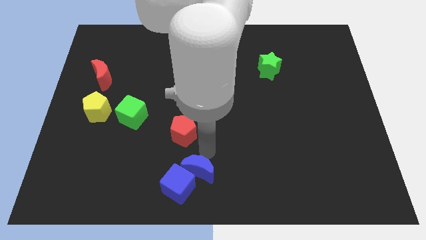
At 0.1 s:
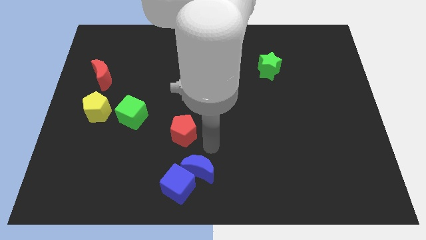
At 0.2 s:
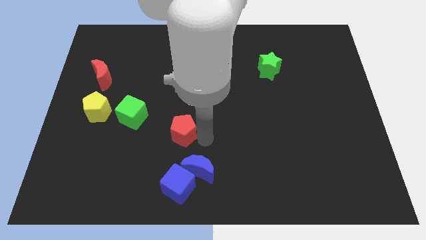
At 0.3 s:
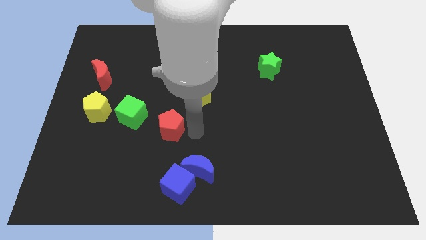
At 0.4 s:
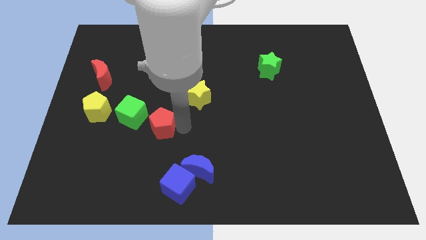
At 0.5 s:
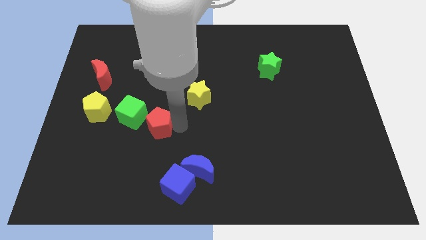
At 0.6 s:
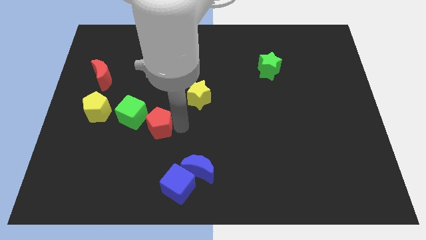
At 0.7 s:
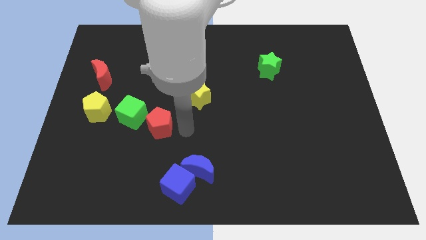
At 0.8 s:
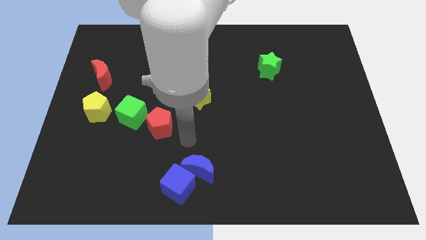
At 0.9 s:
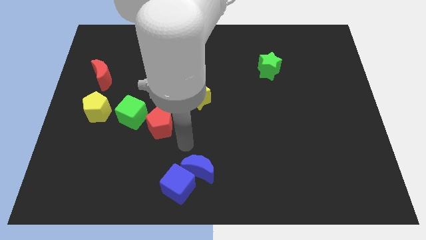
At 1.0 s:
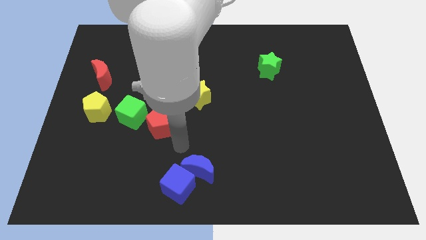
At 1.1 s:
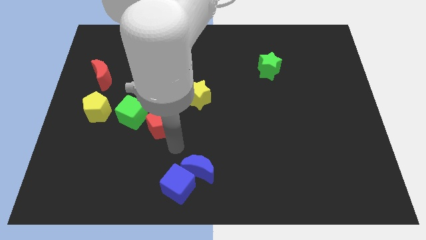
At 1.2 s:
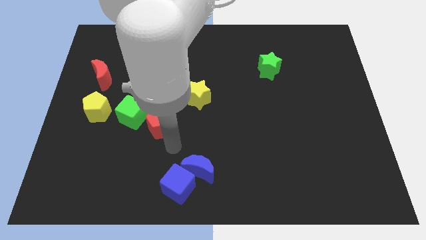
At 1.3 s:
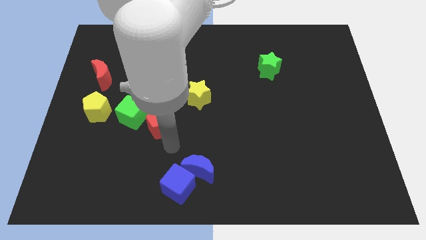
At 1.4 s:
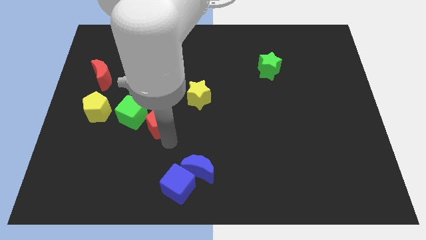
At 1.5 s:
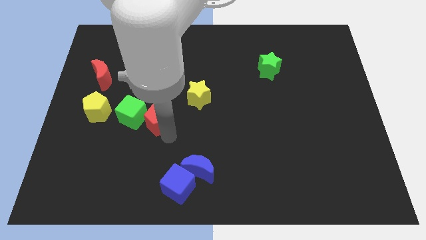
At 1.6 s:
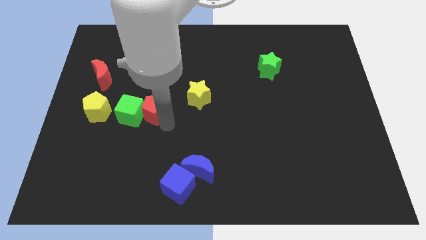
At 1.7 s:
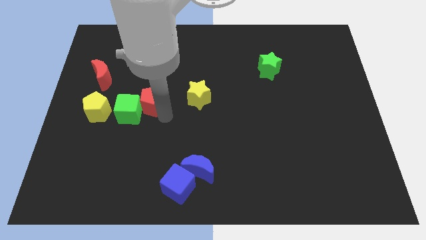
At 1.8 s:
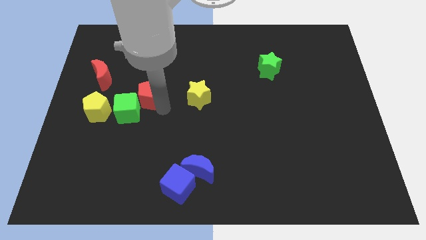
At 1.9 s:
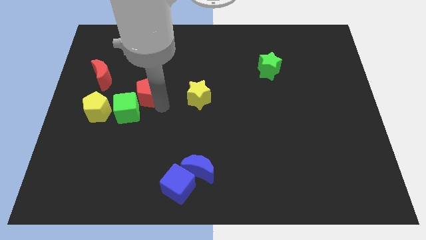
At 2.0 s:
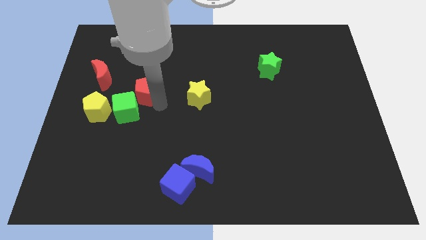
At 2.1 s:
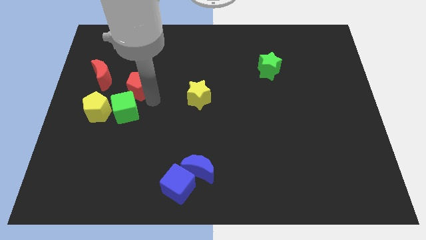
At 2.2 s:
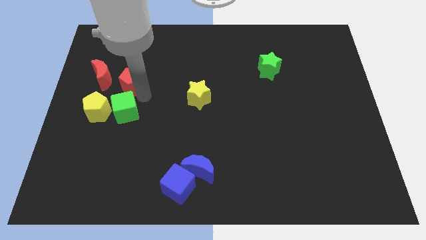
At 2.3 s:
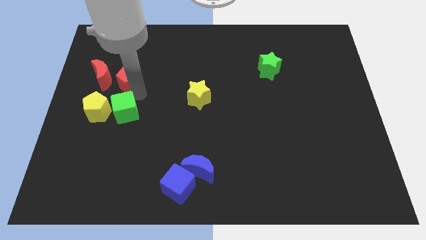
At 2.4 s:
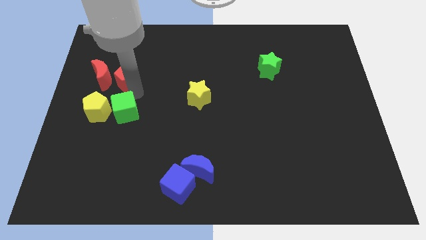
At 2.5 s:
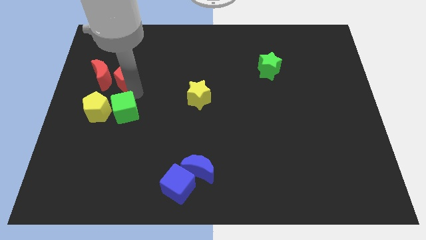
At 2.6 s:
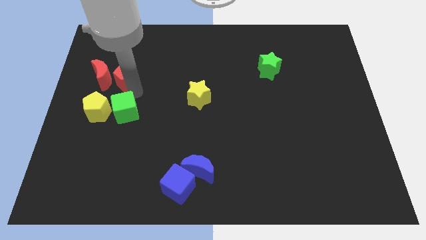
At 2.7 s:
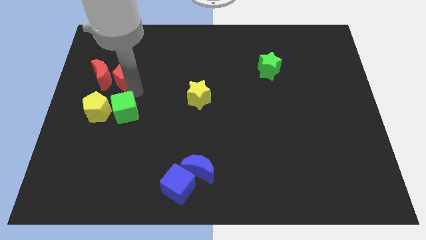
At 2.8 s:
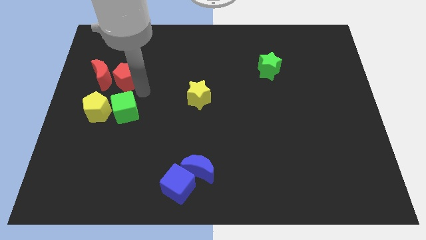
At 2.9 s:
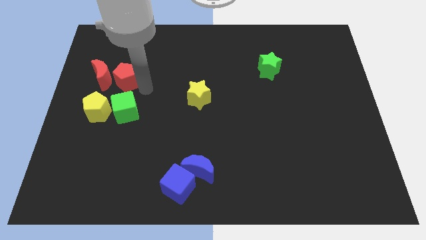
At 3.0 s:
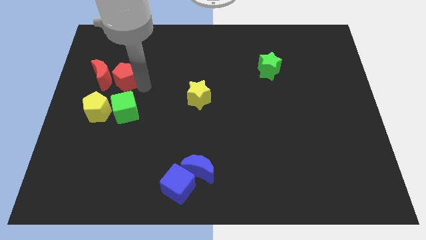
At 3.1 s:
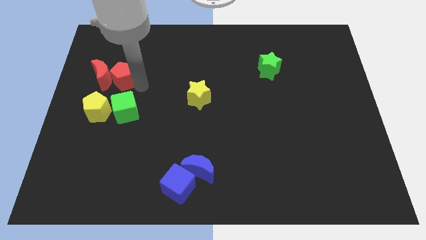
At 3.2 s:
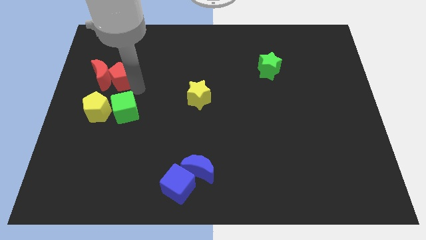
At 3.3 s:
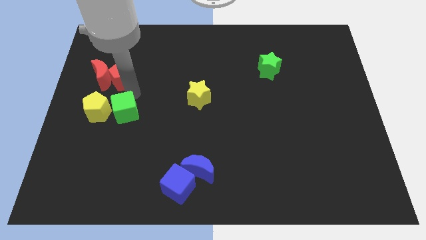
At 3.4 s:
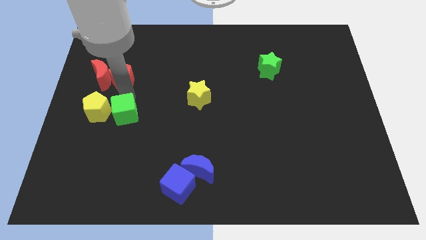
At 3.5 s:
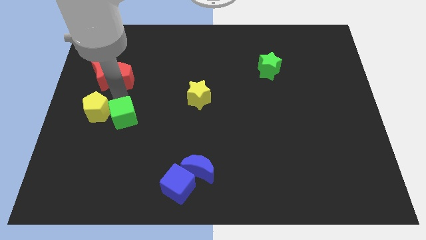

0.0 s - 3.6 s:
push the red pentagon into the red crescent

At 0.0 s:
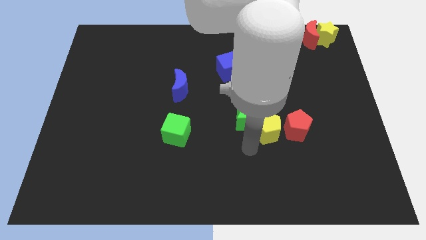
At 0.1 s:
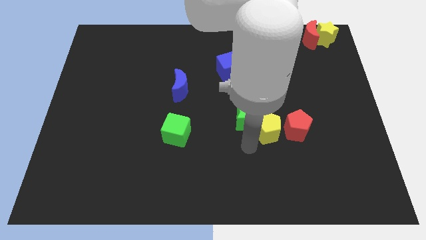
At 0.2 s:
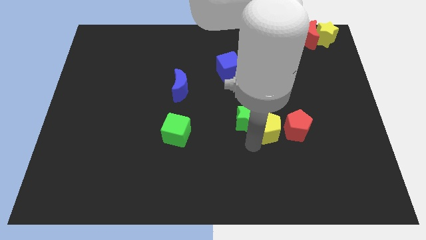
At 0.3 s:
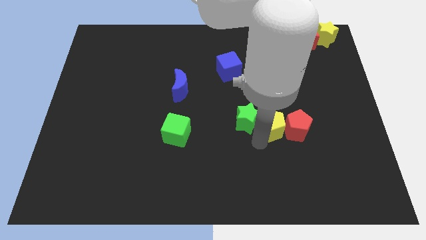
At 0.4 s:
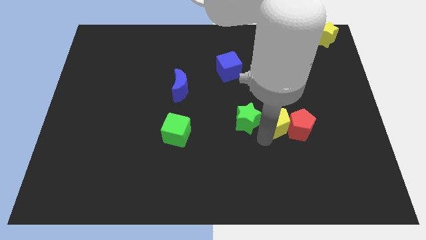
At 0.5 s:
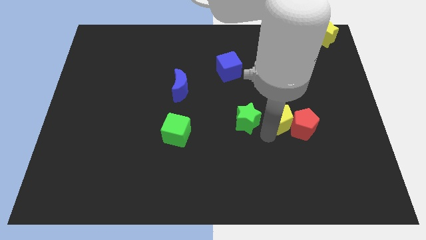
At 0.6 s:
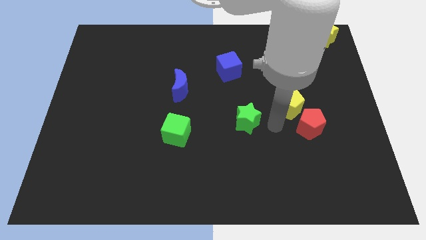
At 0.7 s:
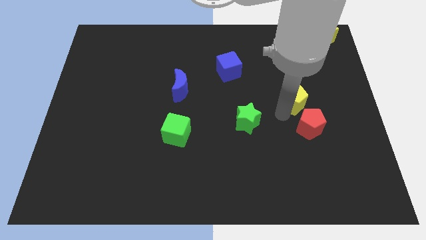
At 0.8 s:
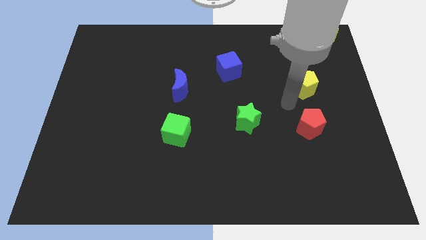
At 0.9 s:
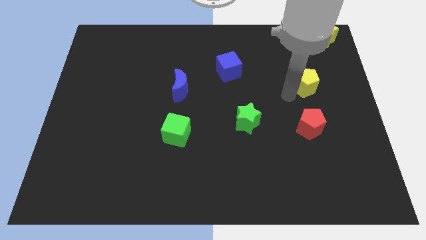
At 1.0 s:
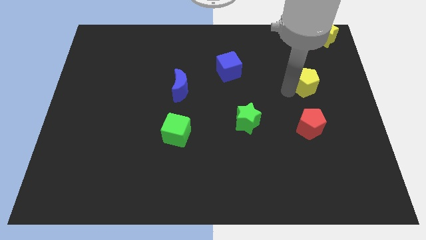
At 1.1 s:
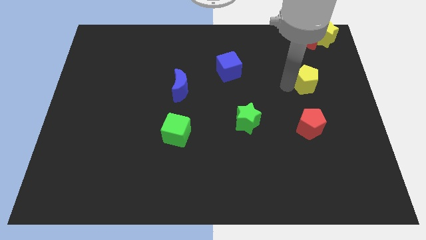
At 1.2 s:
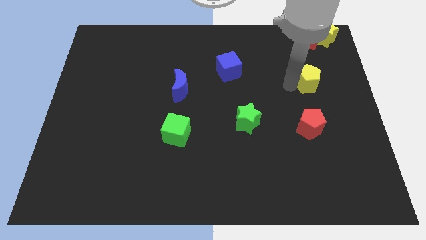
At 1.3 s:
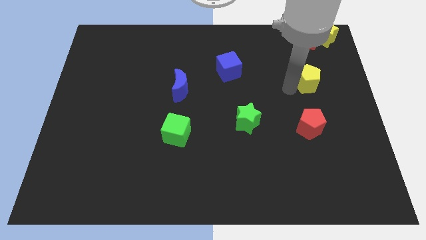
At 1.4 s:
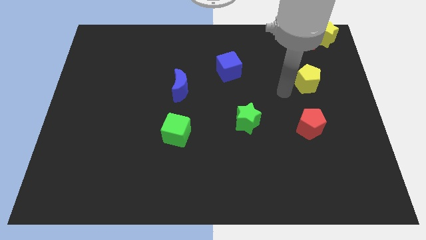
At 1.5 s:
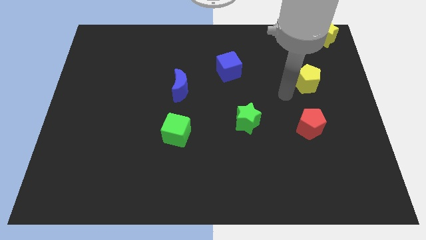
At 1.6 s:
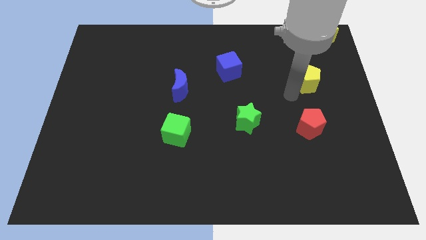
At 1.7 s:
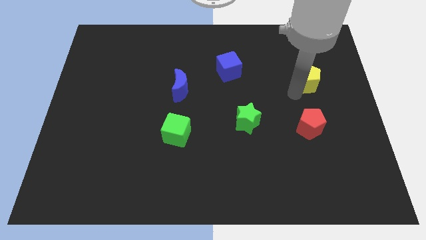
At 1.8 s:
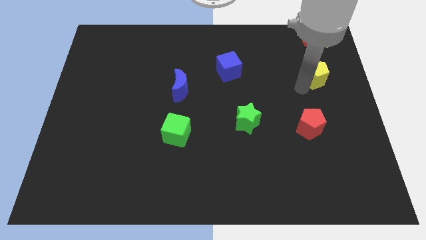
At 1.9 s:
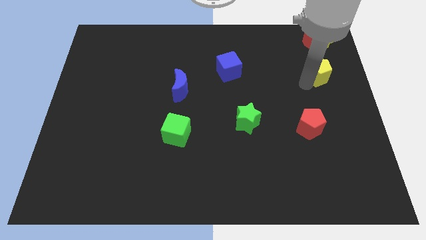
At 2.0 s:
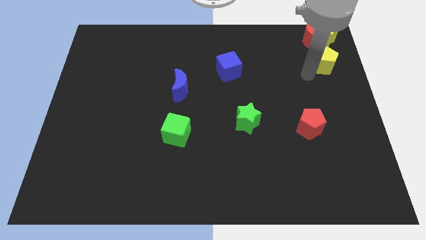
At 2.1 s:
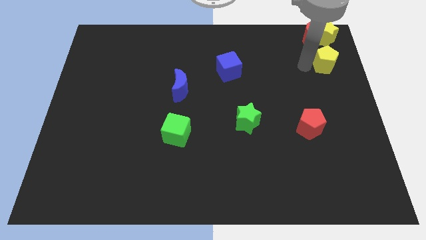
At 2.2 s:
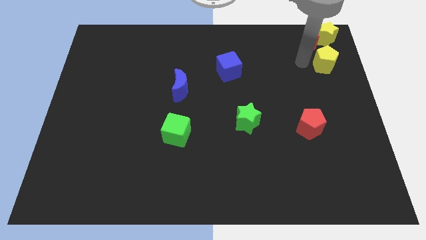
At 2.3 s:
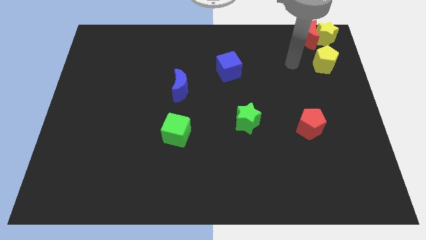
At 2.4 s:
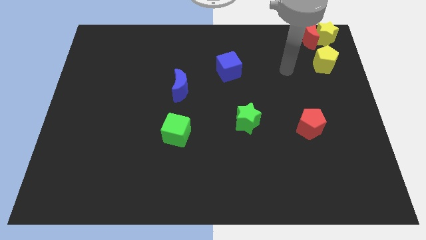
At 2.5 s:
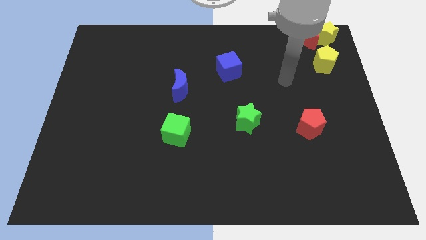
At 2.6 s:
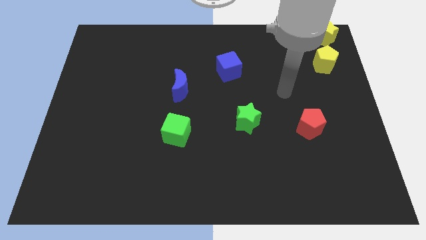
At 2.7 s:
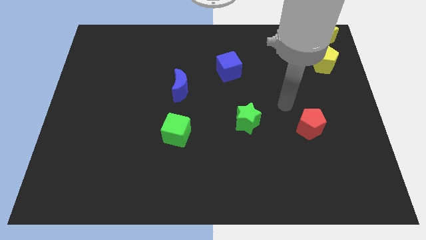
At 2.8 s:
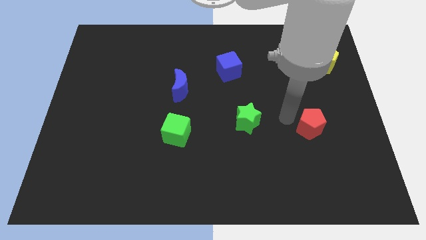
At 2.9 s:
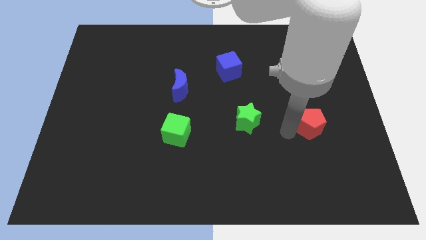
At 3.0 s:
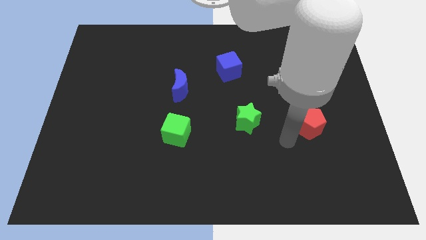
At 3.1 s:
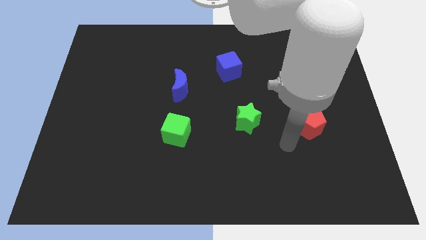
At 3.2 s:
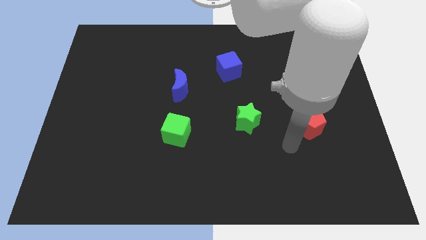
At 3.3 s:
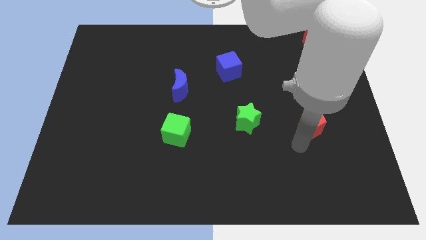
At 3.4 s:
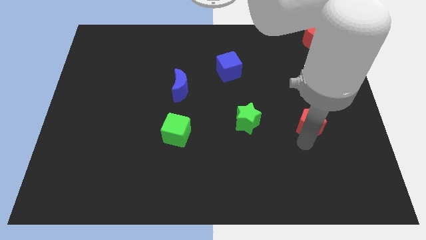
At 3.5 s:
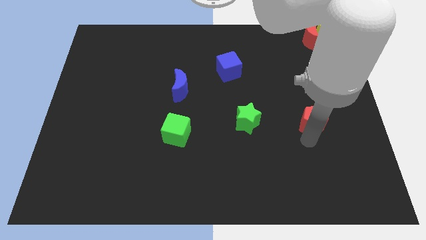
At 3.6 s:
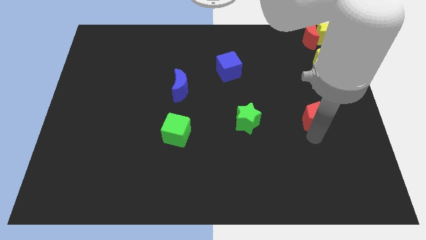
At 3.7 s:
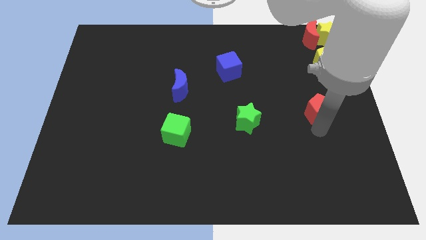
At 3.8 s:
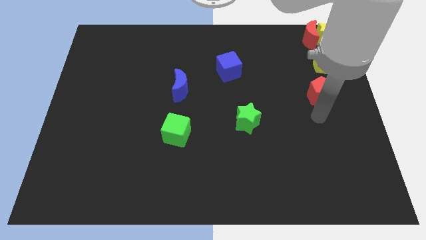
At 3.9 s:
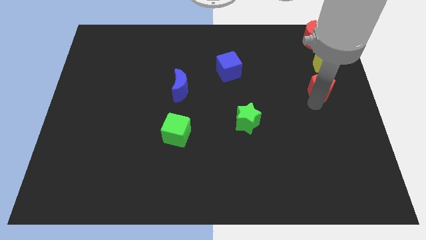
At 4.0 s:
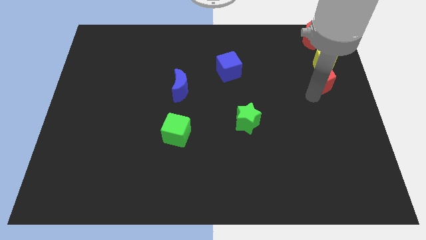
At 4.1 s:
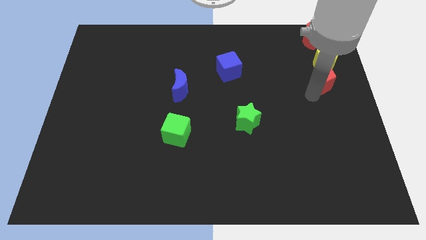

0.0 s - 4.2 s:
move the yellow pentagon and red pentagon diagonally on the bottom left side of the yellow star

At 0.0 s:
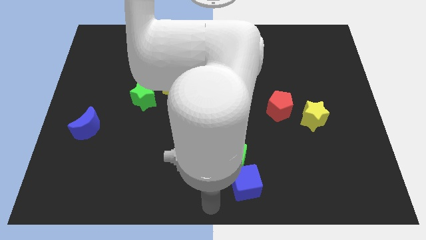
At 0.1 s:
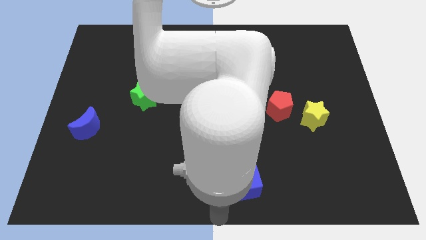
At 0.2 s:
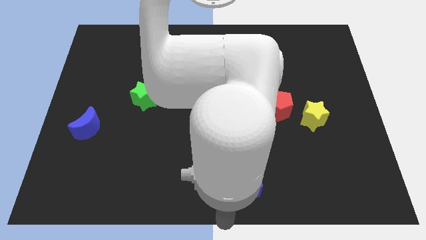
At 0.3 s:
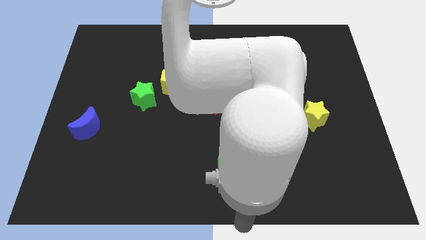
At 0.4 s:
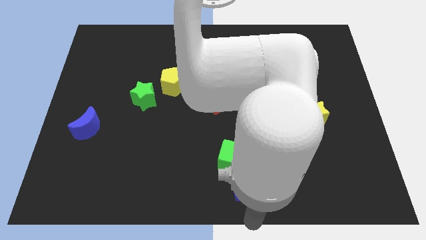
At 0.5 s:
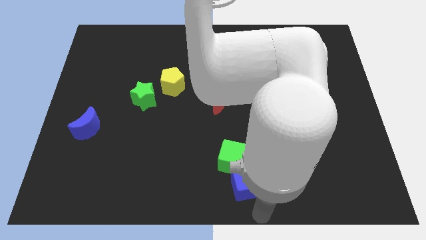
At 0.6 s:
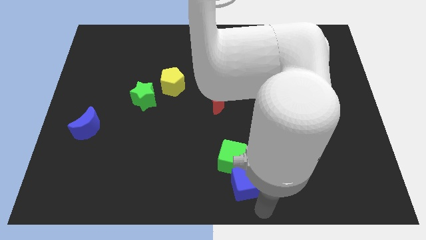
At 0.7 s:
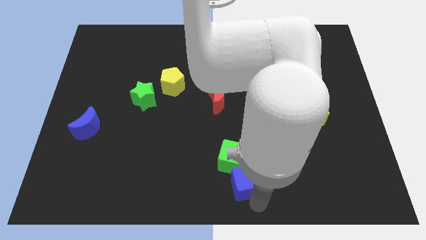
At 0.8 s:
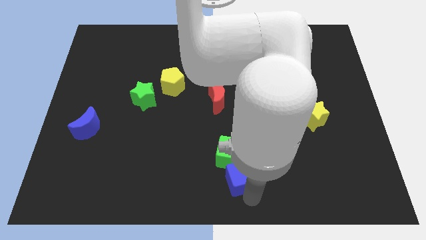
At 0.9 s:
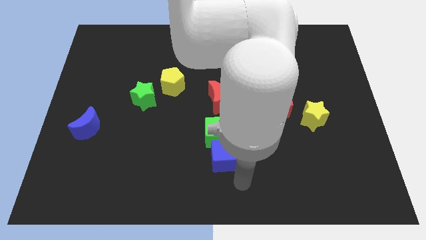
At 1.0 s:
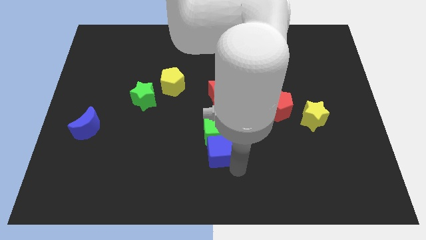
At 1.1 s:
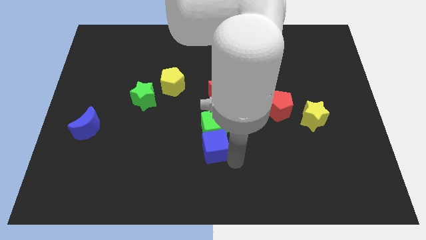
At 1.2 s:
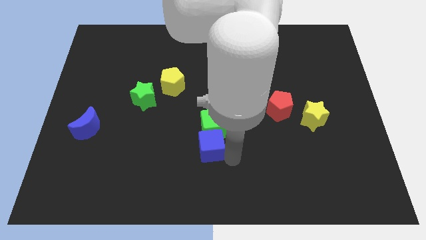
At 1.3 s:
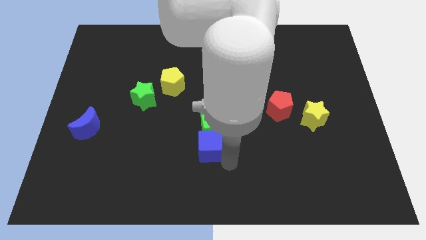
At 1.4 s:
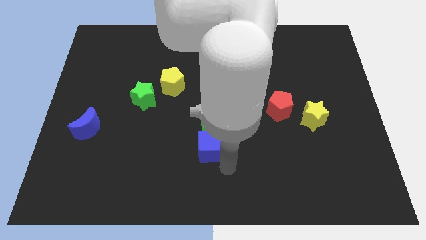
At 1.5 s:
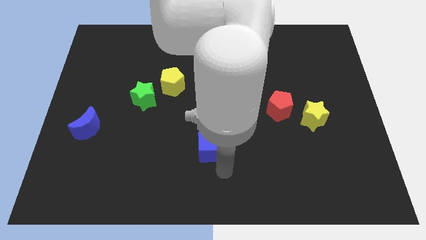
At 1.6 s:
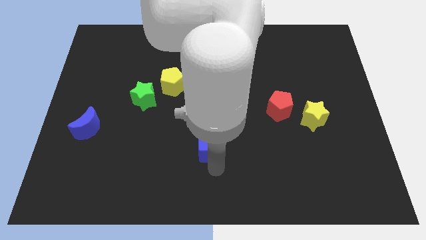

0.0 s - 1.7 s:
move the blue cube towards the center
